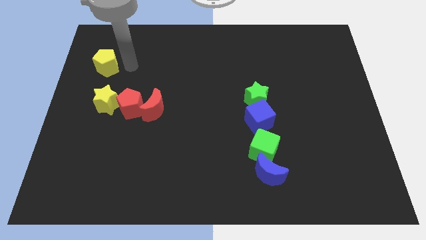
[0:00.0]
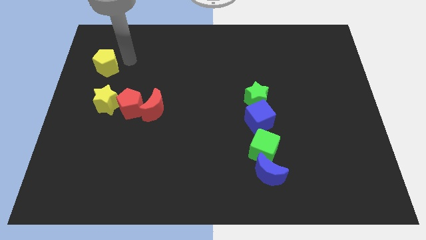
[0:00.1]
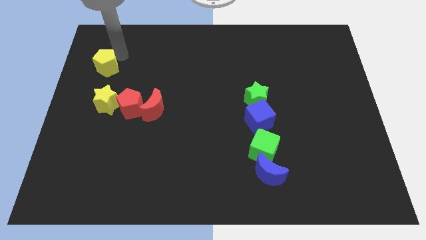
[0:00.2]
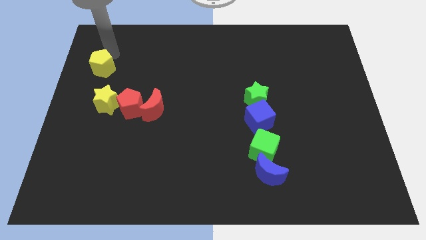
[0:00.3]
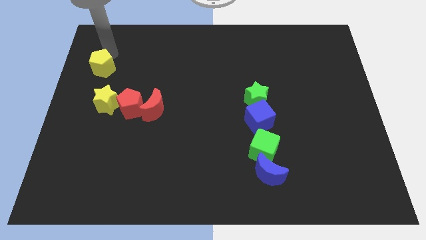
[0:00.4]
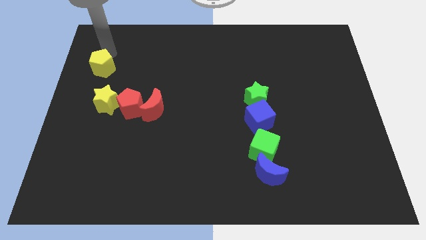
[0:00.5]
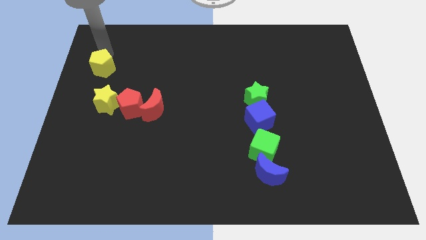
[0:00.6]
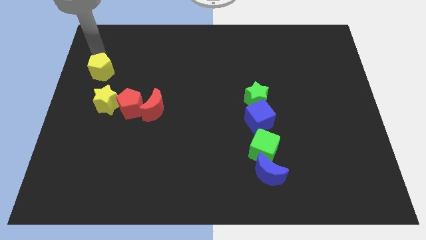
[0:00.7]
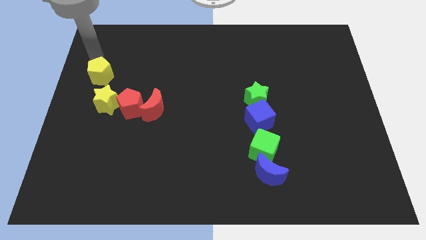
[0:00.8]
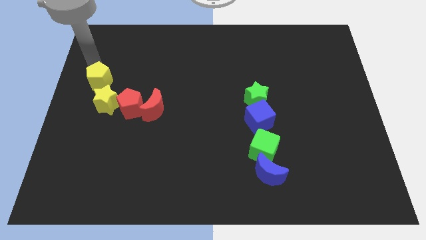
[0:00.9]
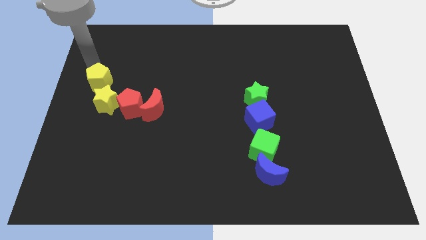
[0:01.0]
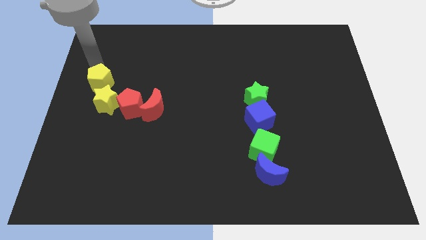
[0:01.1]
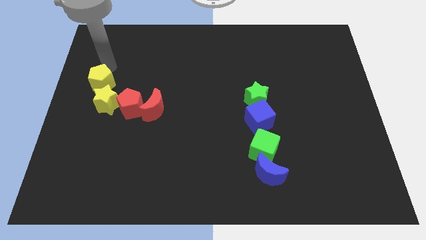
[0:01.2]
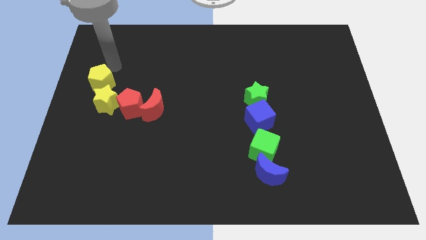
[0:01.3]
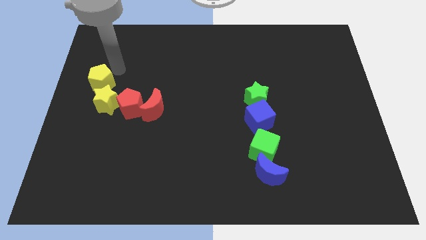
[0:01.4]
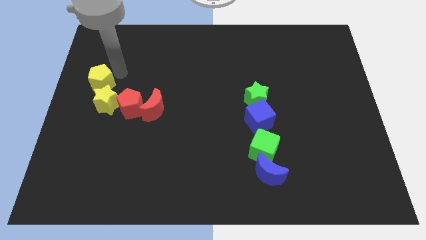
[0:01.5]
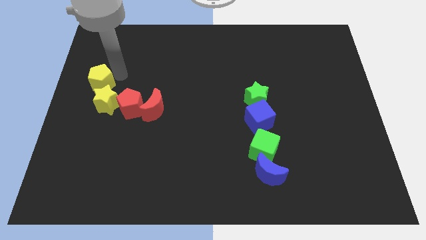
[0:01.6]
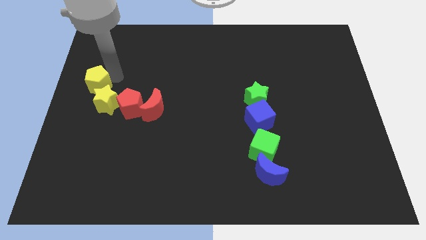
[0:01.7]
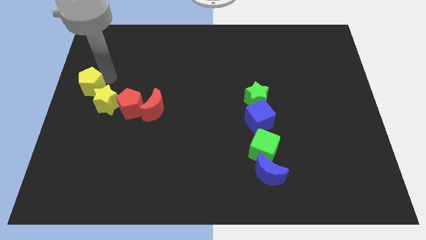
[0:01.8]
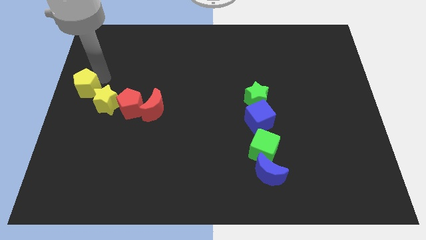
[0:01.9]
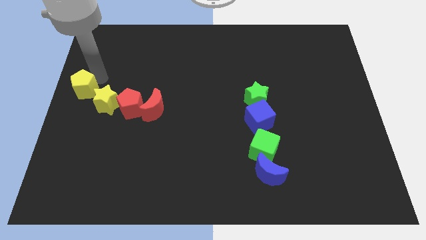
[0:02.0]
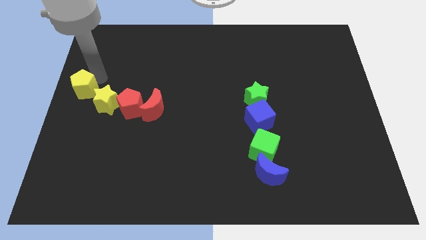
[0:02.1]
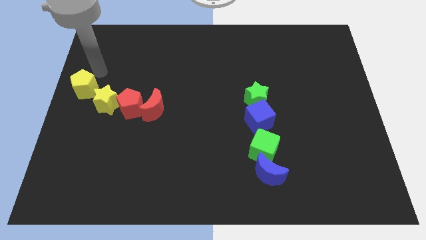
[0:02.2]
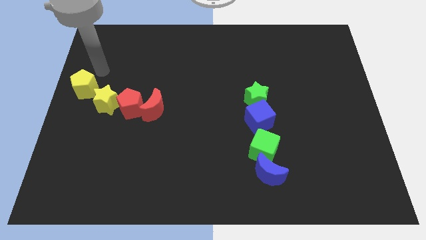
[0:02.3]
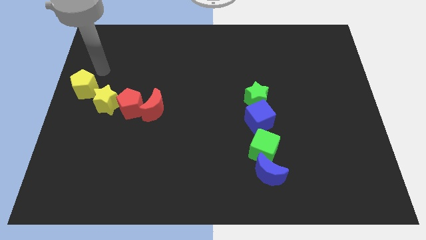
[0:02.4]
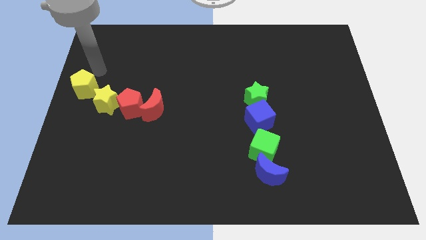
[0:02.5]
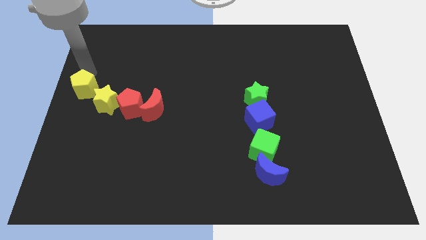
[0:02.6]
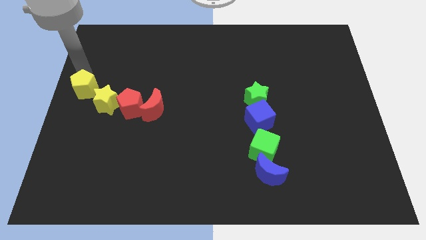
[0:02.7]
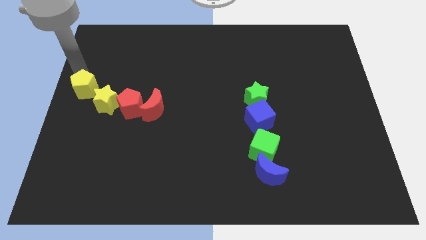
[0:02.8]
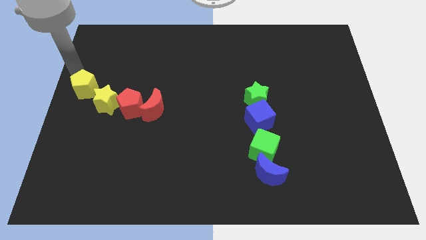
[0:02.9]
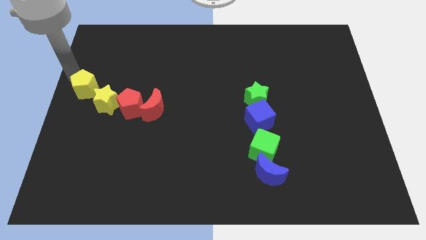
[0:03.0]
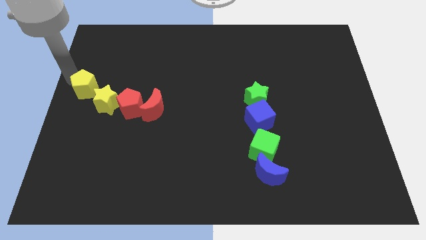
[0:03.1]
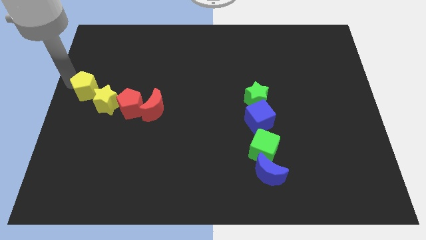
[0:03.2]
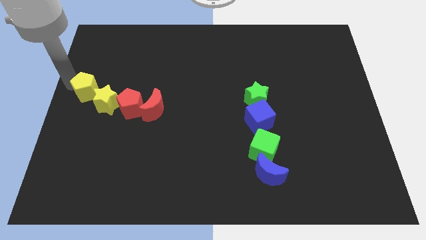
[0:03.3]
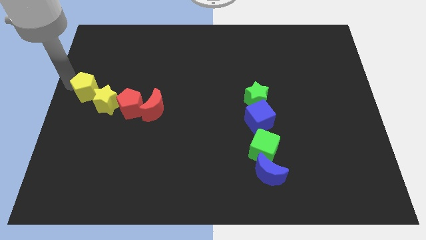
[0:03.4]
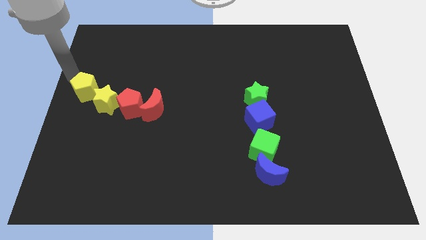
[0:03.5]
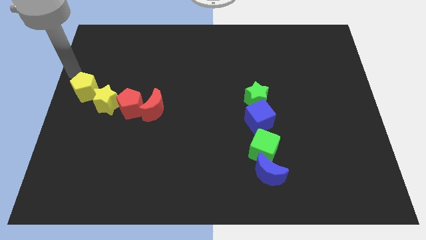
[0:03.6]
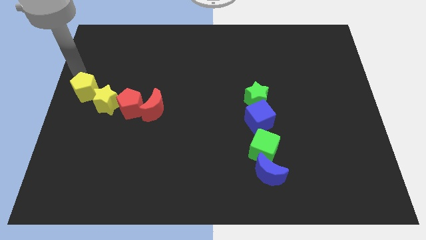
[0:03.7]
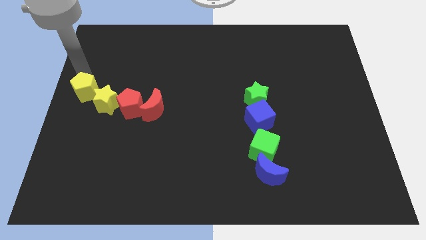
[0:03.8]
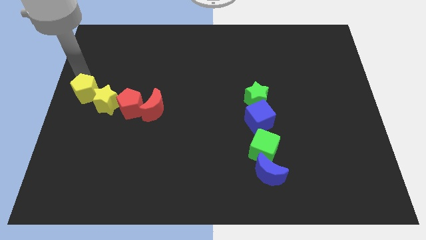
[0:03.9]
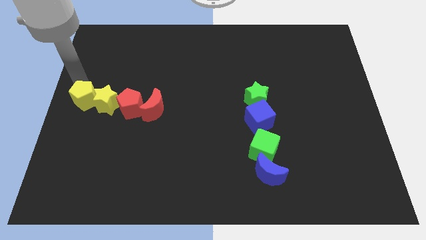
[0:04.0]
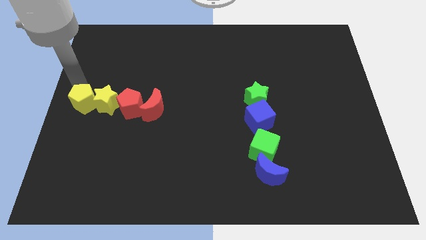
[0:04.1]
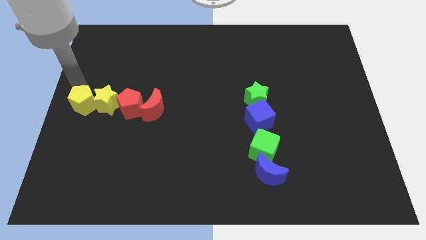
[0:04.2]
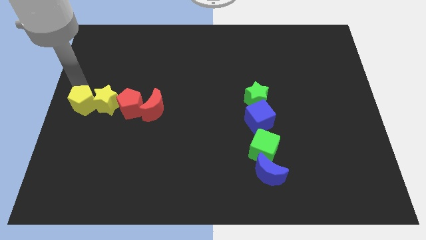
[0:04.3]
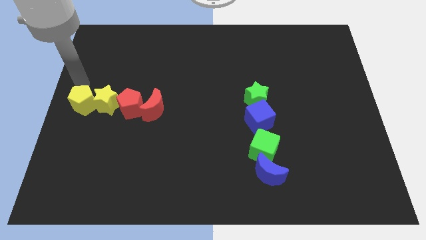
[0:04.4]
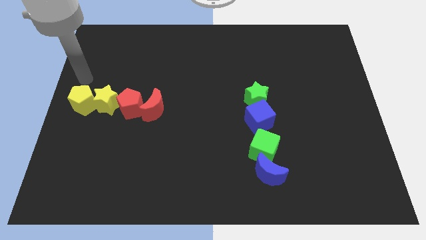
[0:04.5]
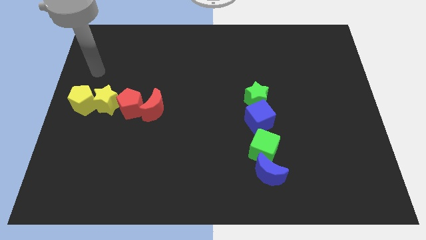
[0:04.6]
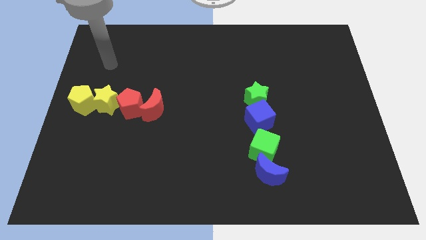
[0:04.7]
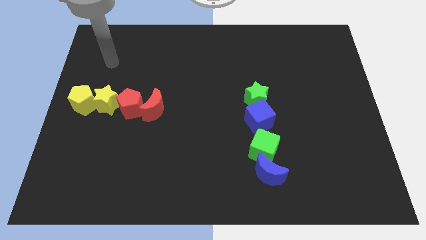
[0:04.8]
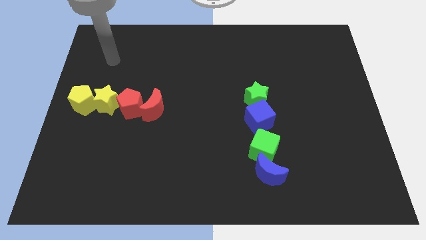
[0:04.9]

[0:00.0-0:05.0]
place the yellow pentagon at the center left corner

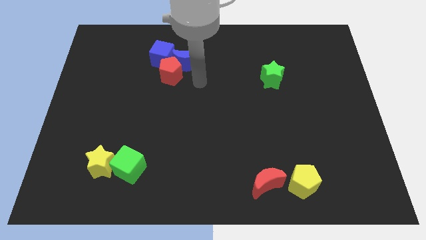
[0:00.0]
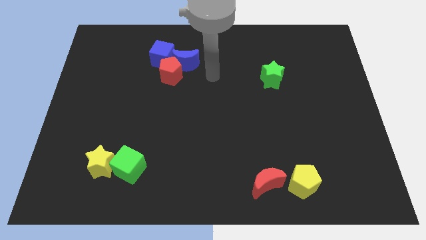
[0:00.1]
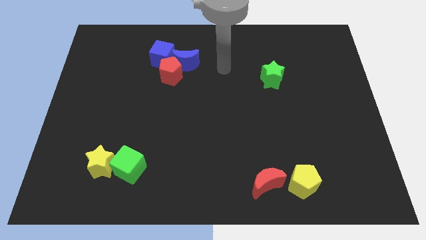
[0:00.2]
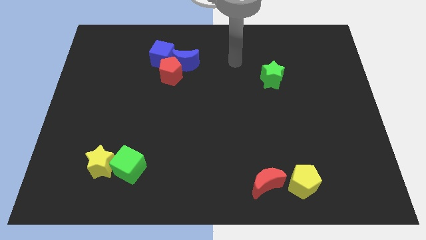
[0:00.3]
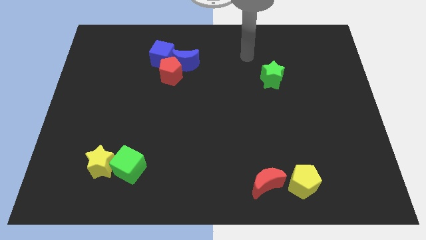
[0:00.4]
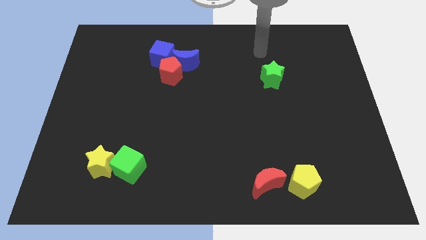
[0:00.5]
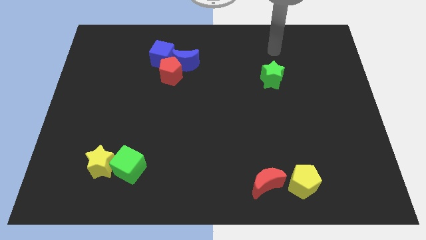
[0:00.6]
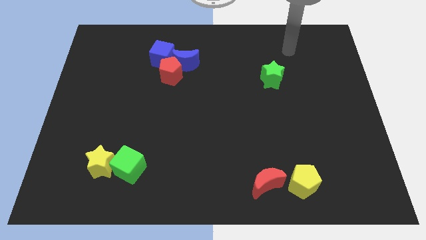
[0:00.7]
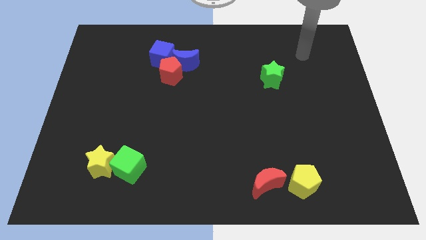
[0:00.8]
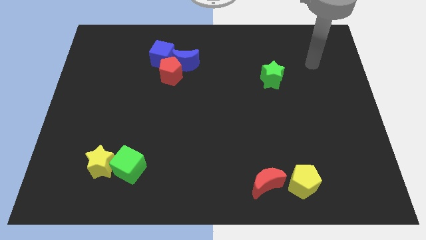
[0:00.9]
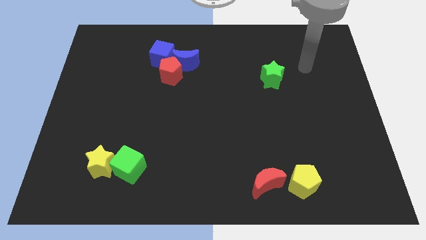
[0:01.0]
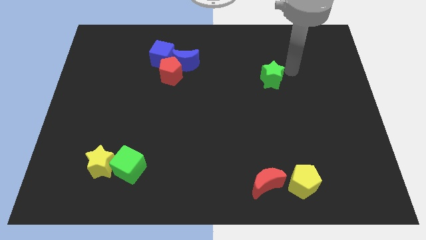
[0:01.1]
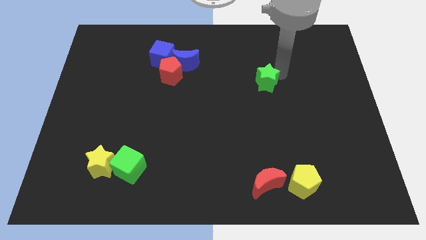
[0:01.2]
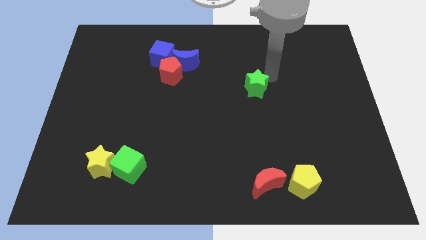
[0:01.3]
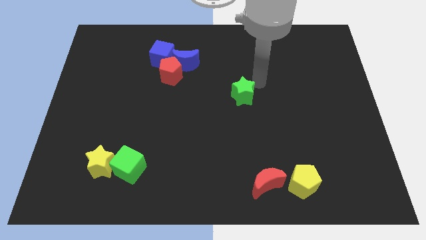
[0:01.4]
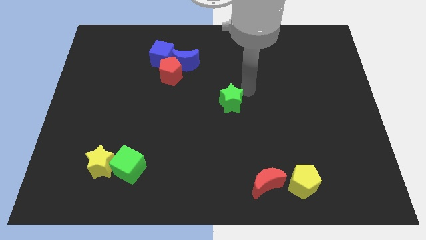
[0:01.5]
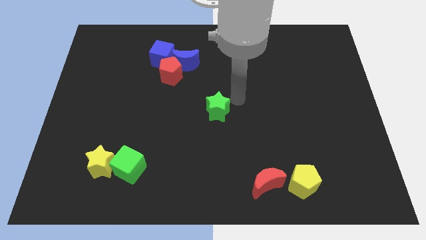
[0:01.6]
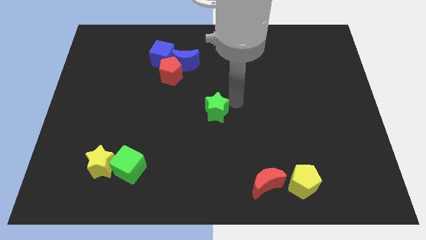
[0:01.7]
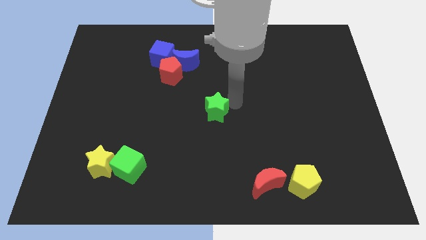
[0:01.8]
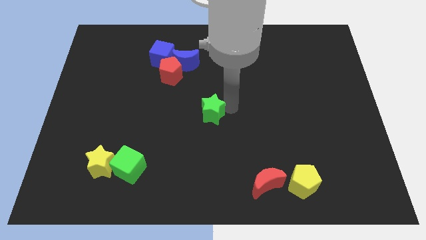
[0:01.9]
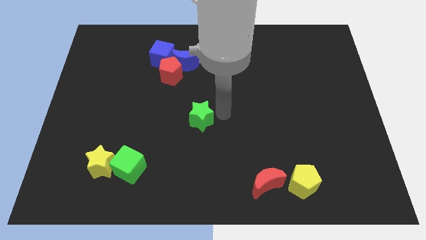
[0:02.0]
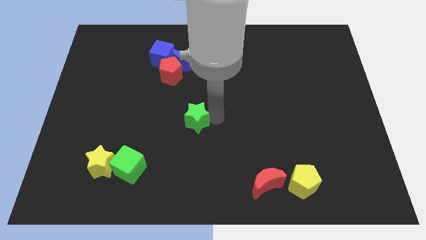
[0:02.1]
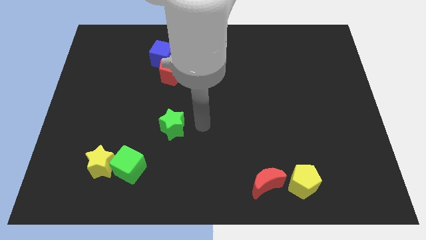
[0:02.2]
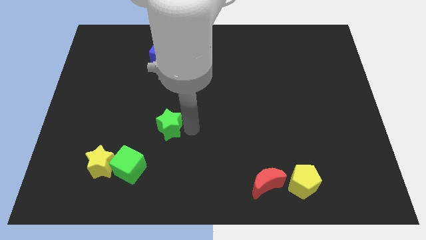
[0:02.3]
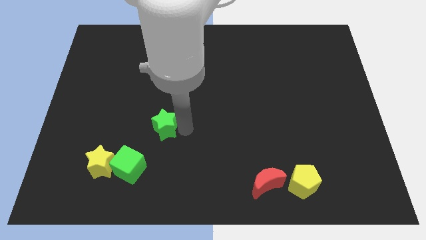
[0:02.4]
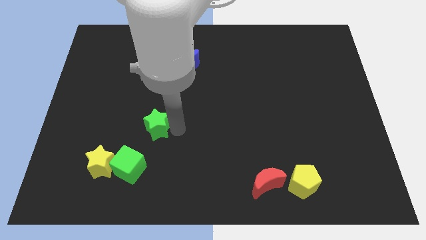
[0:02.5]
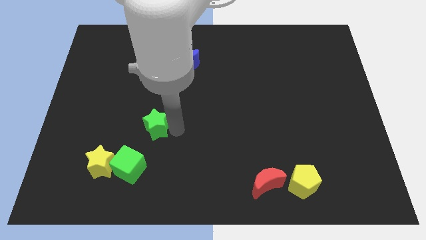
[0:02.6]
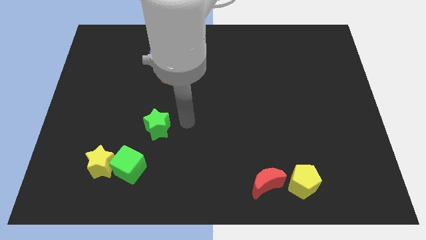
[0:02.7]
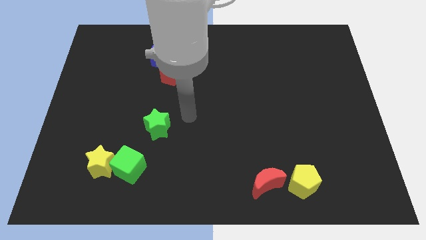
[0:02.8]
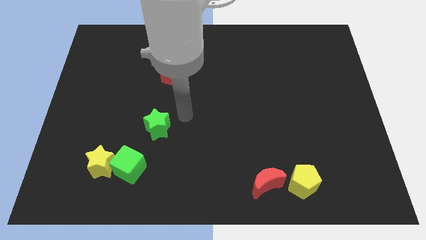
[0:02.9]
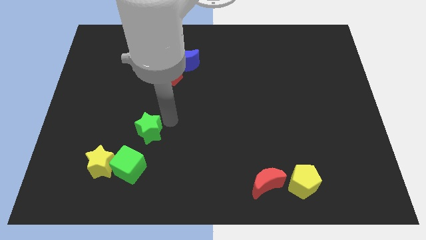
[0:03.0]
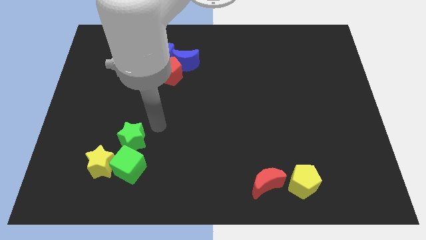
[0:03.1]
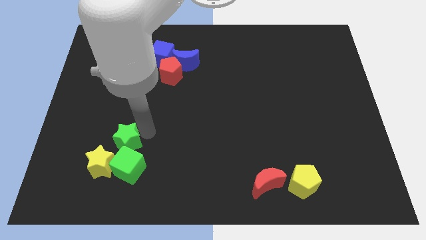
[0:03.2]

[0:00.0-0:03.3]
slide the green star into the top side of the green cube

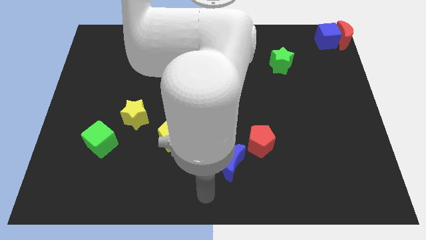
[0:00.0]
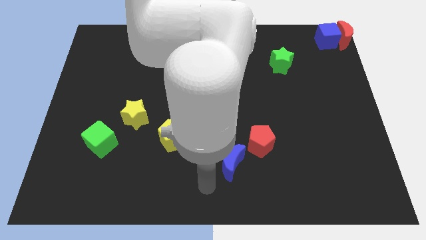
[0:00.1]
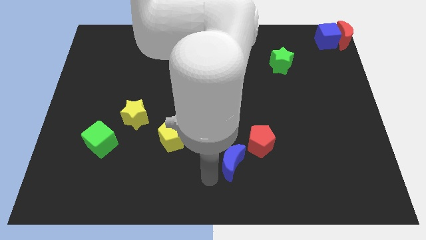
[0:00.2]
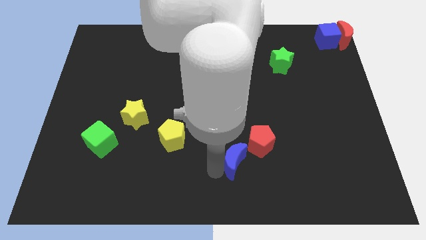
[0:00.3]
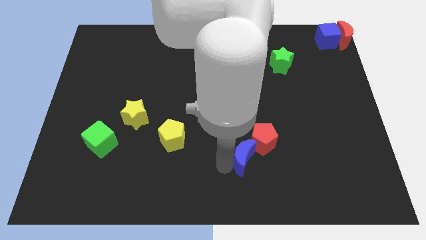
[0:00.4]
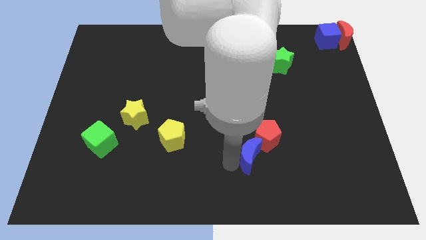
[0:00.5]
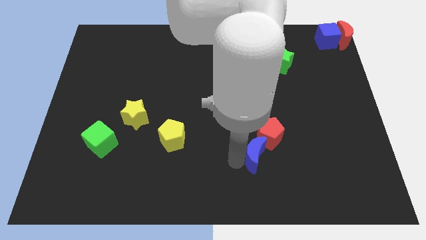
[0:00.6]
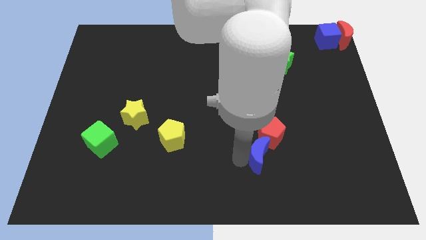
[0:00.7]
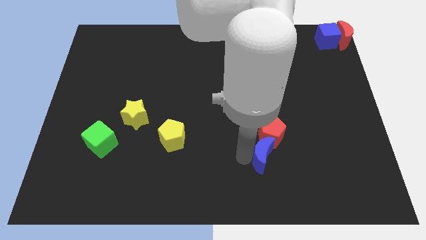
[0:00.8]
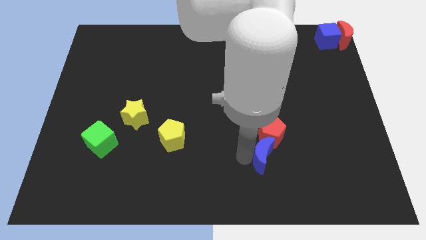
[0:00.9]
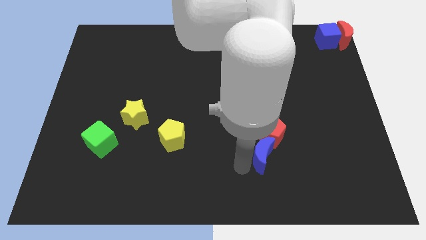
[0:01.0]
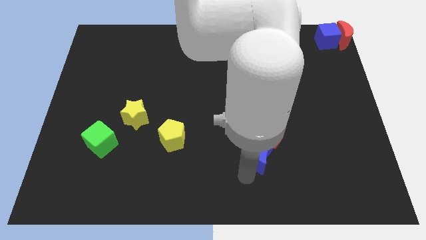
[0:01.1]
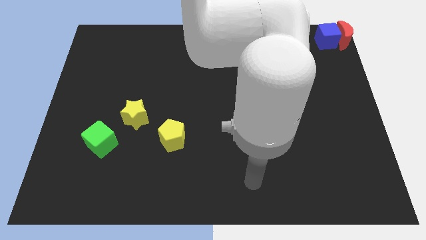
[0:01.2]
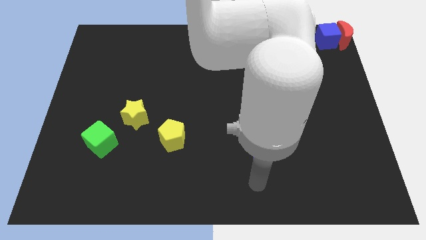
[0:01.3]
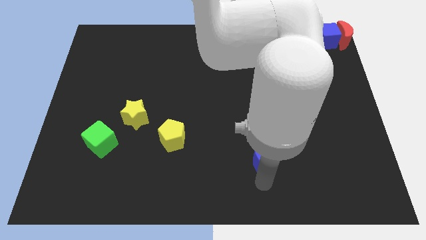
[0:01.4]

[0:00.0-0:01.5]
push the blue moon into the red pentagon
